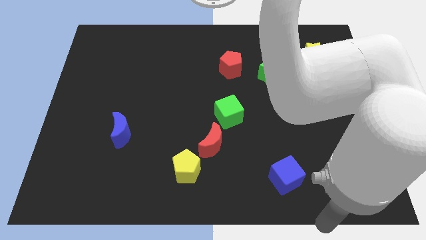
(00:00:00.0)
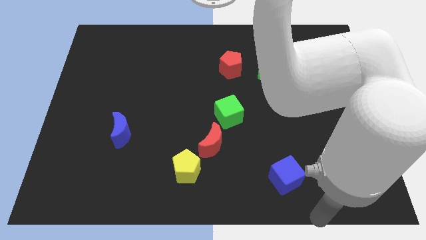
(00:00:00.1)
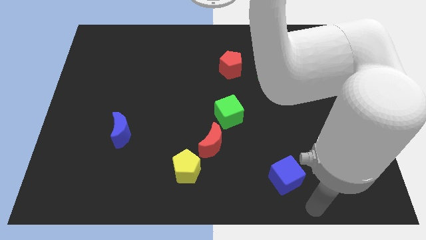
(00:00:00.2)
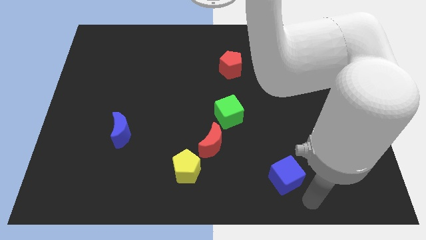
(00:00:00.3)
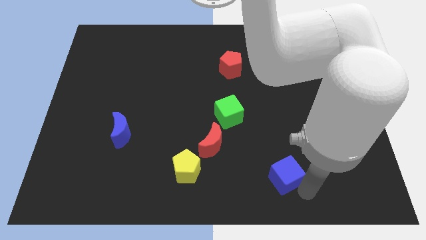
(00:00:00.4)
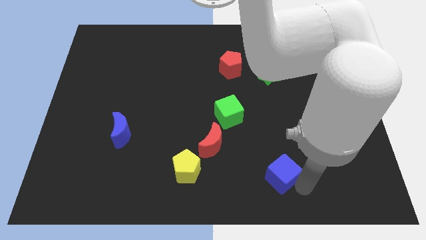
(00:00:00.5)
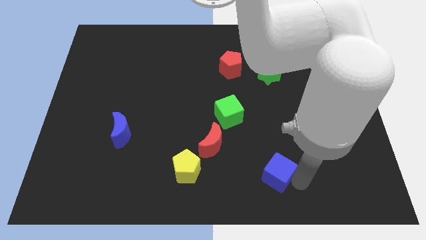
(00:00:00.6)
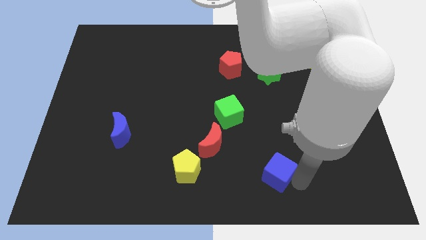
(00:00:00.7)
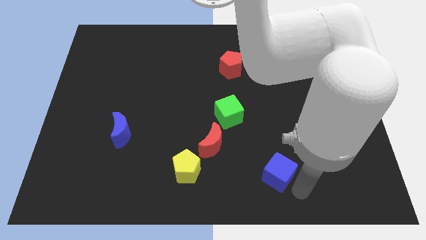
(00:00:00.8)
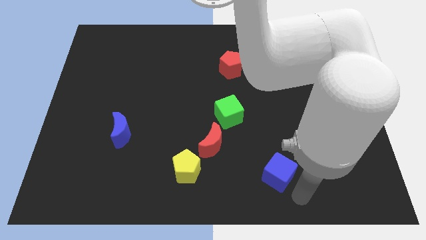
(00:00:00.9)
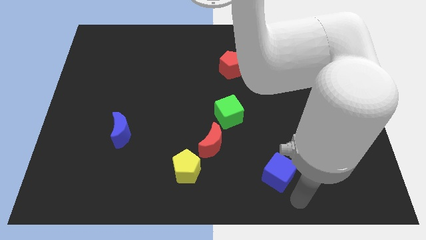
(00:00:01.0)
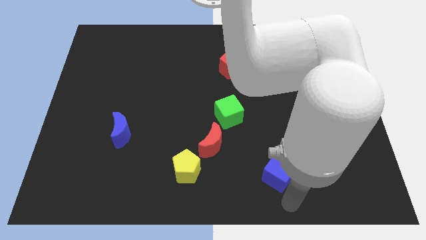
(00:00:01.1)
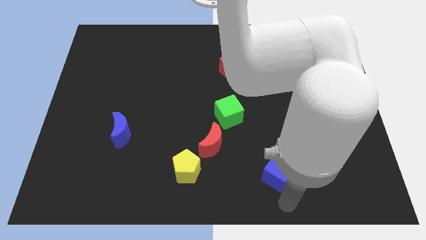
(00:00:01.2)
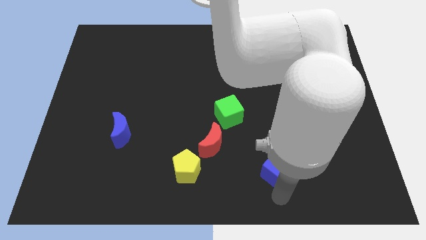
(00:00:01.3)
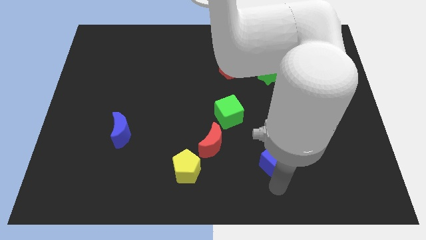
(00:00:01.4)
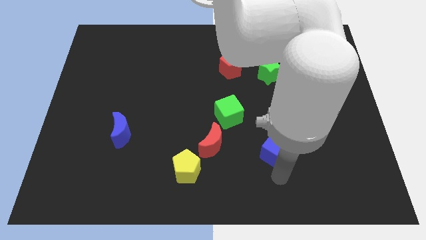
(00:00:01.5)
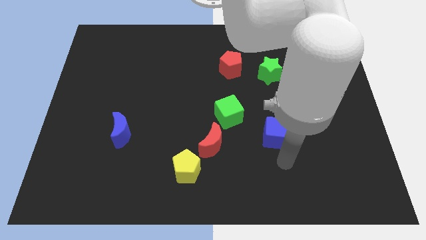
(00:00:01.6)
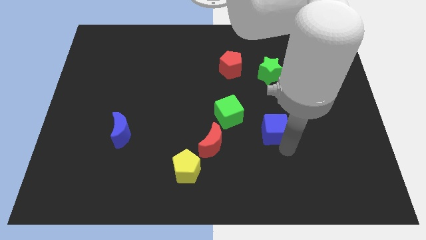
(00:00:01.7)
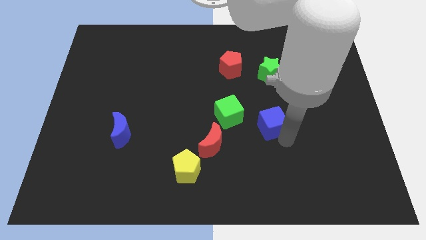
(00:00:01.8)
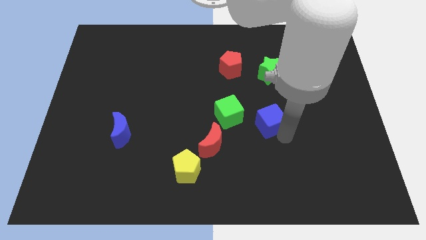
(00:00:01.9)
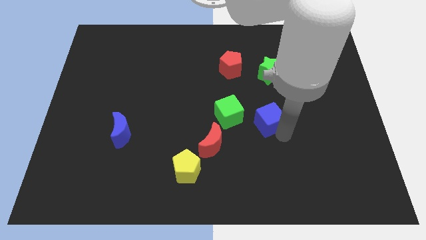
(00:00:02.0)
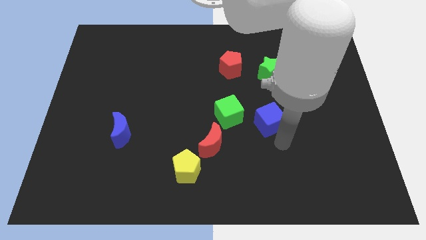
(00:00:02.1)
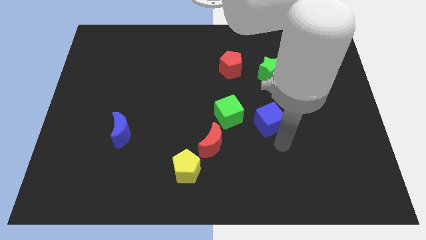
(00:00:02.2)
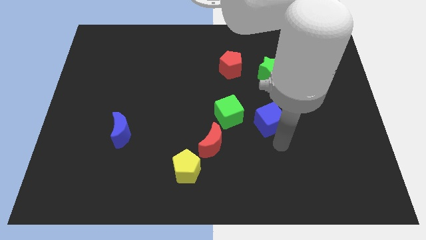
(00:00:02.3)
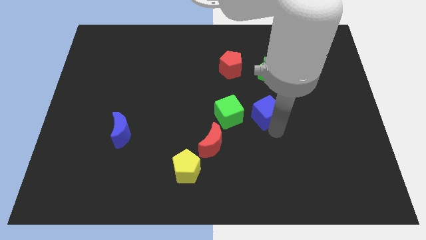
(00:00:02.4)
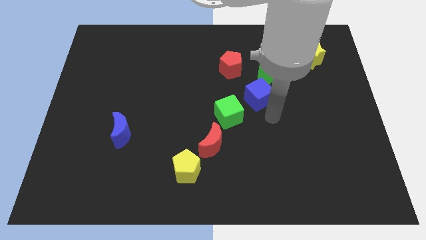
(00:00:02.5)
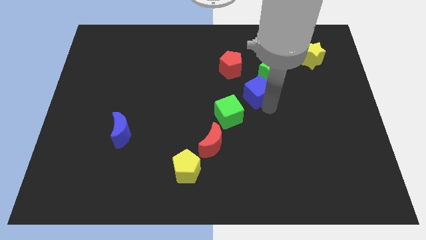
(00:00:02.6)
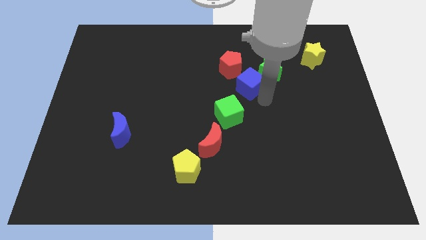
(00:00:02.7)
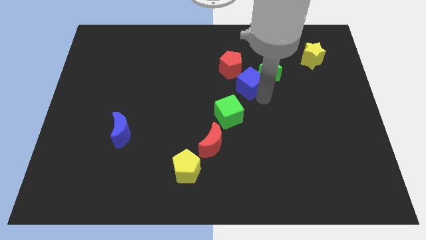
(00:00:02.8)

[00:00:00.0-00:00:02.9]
place the blue cube diagonalyl to the green cube

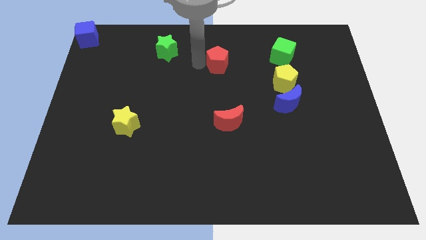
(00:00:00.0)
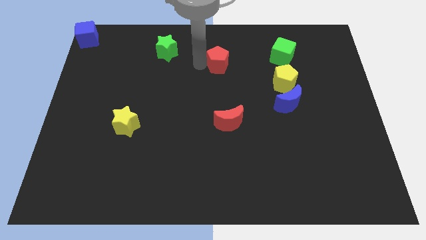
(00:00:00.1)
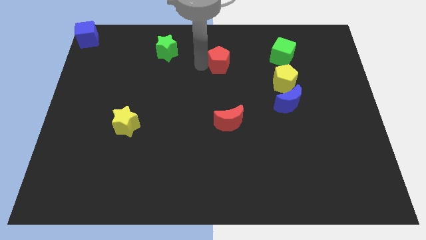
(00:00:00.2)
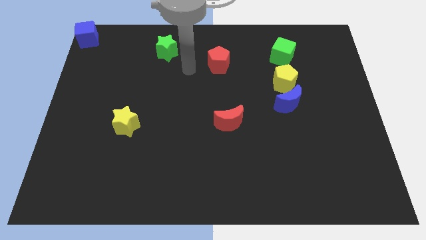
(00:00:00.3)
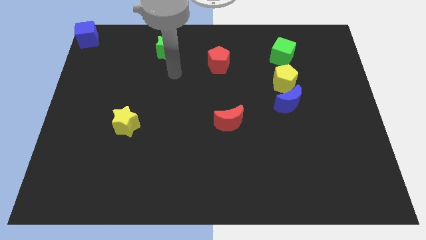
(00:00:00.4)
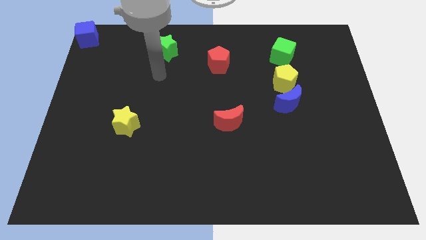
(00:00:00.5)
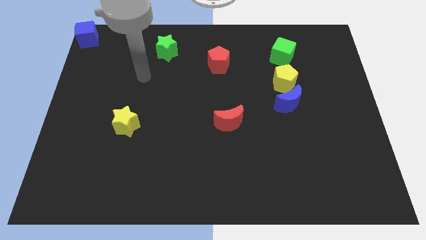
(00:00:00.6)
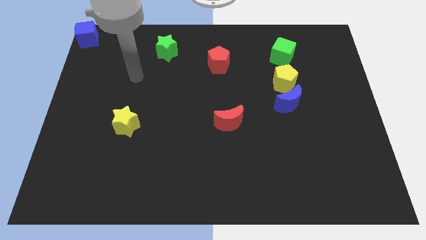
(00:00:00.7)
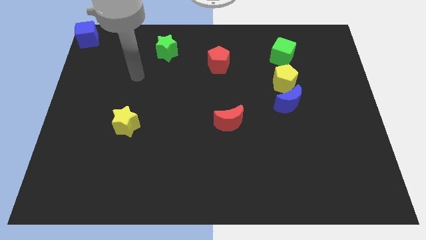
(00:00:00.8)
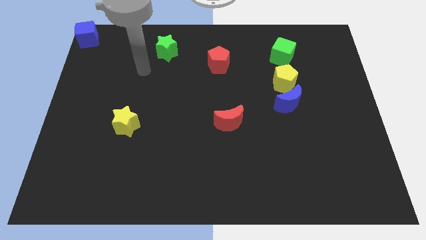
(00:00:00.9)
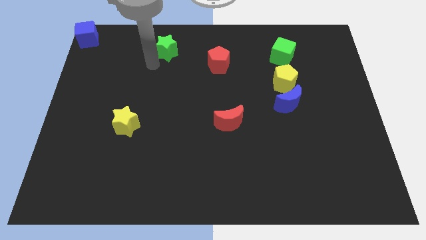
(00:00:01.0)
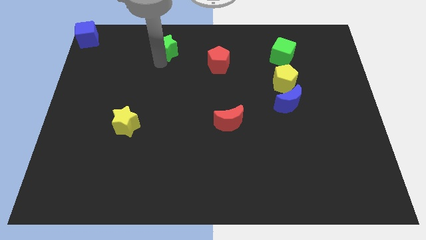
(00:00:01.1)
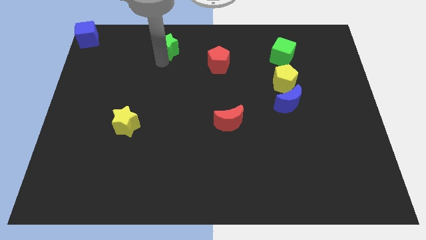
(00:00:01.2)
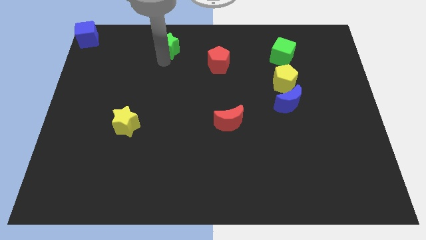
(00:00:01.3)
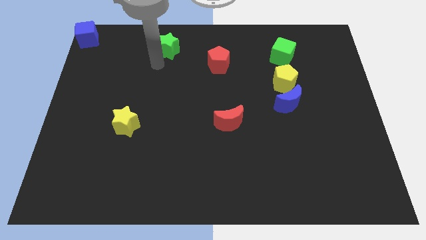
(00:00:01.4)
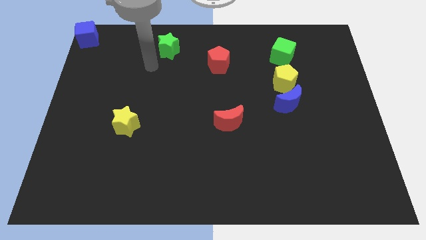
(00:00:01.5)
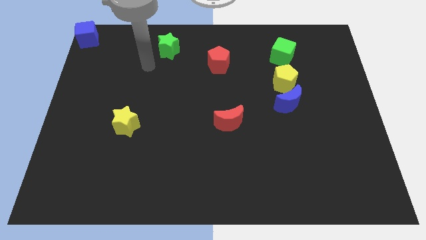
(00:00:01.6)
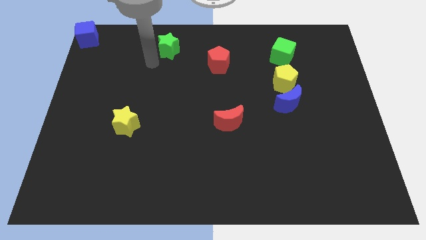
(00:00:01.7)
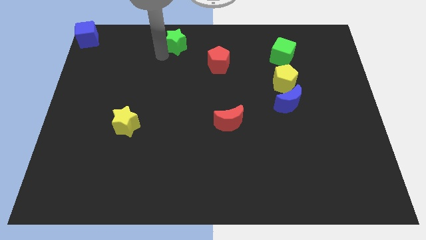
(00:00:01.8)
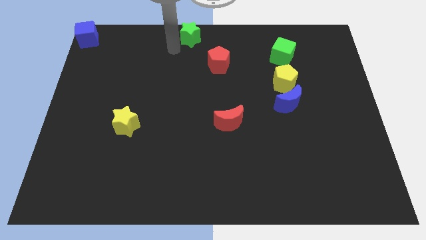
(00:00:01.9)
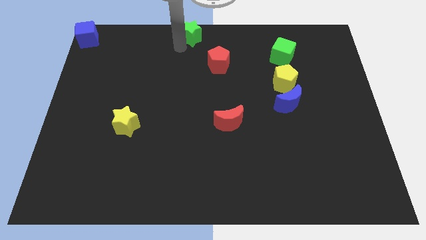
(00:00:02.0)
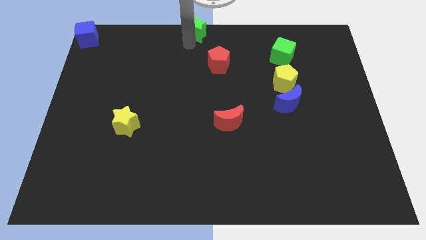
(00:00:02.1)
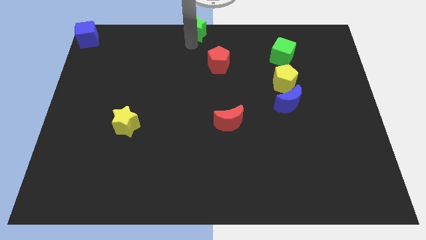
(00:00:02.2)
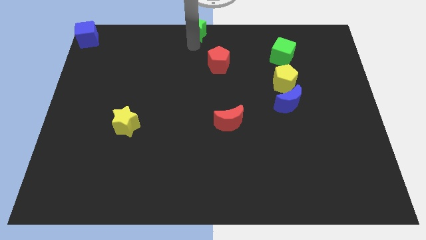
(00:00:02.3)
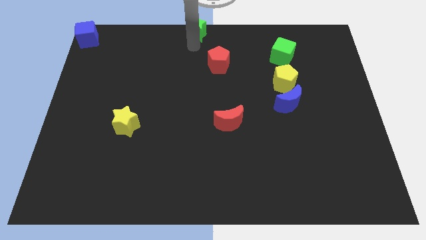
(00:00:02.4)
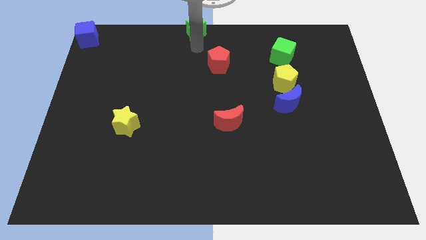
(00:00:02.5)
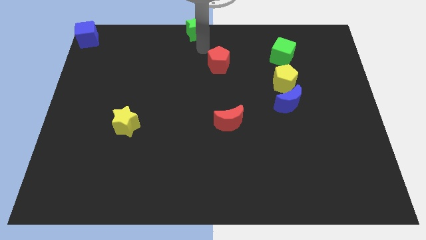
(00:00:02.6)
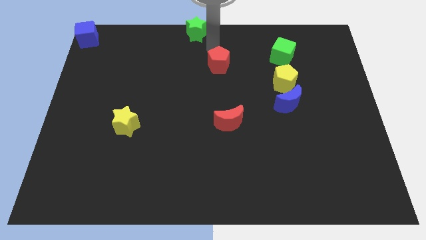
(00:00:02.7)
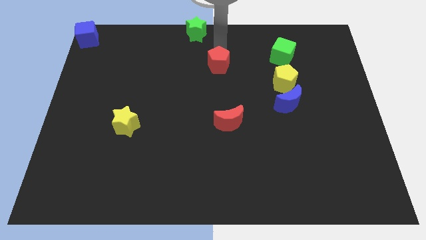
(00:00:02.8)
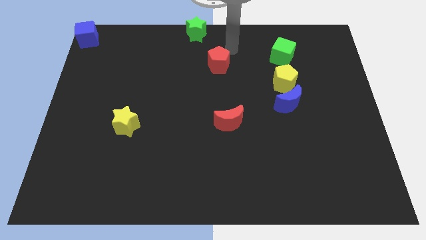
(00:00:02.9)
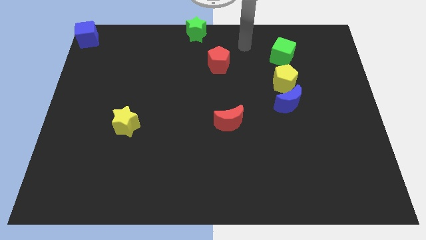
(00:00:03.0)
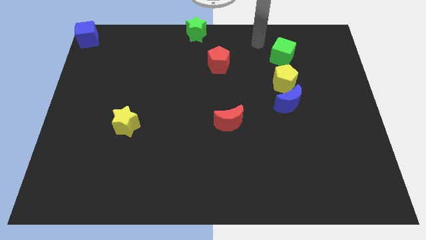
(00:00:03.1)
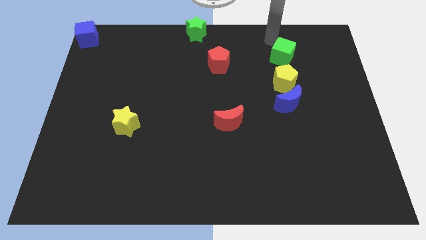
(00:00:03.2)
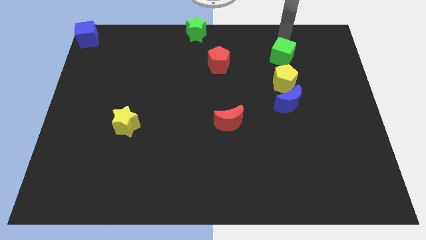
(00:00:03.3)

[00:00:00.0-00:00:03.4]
move the green star to the top middle of the board

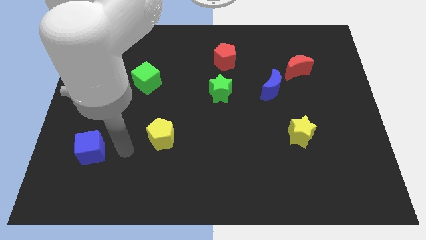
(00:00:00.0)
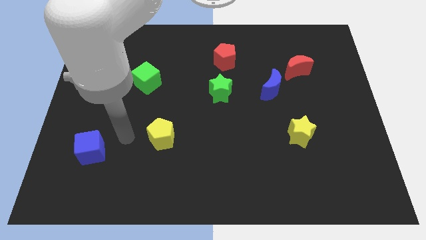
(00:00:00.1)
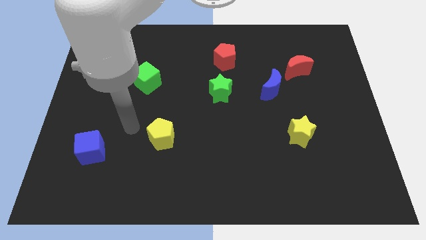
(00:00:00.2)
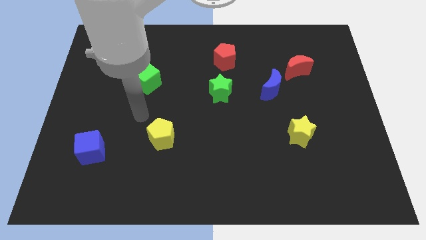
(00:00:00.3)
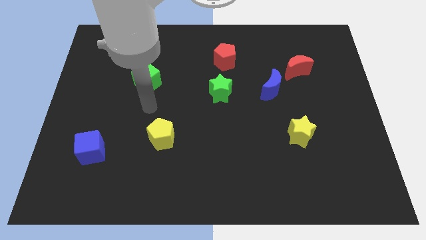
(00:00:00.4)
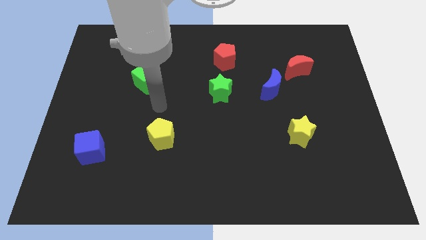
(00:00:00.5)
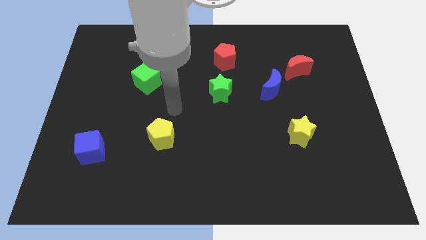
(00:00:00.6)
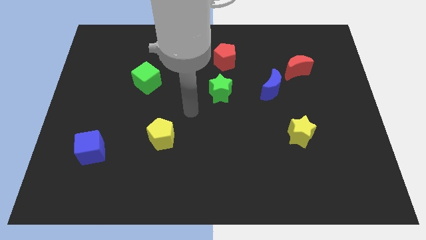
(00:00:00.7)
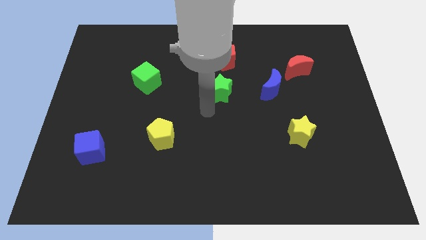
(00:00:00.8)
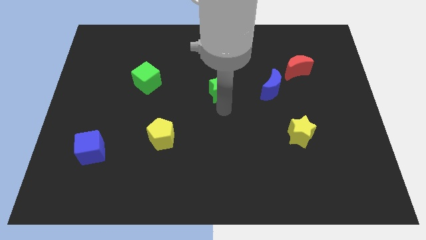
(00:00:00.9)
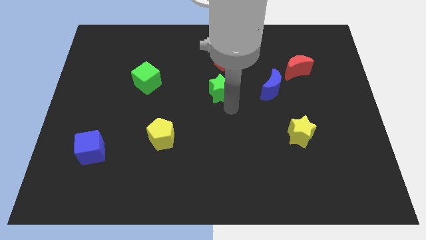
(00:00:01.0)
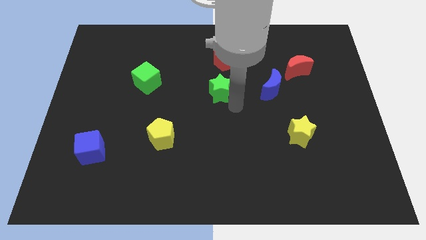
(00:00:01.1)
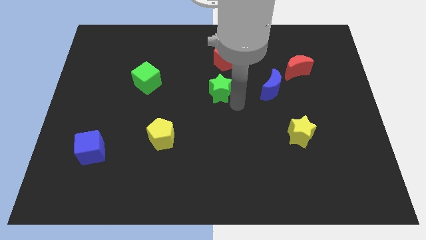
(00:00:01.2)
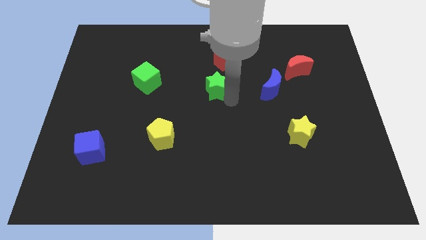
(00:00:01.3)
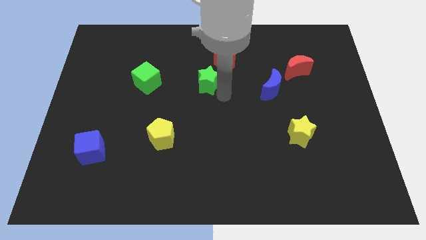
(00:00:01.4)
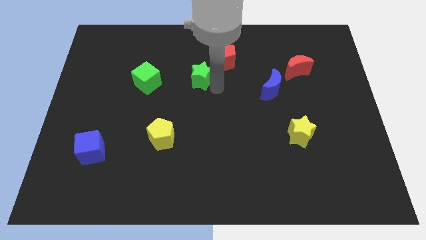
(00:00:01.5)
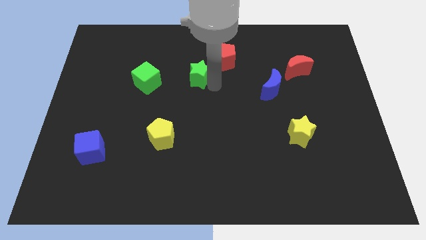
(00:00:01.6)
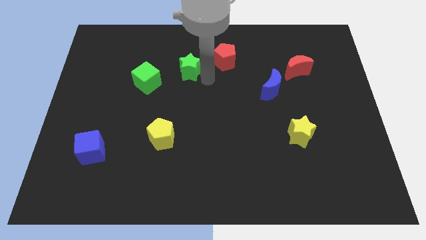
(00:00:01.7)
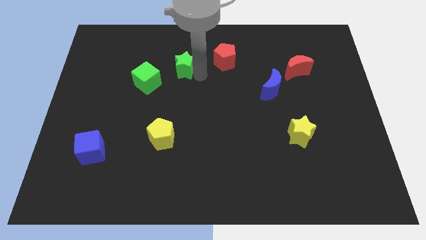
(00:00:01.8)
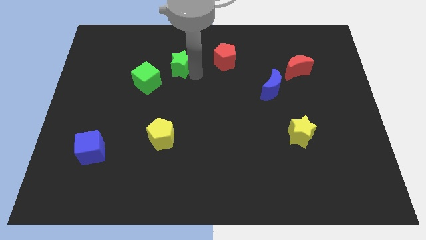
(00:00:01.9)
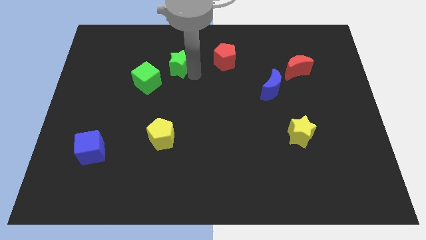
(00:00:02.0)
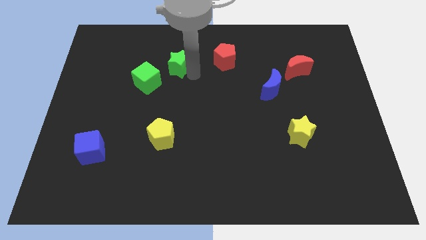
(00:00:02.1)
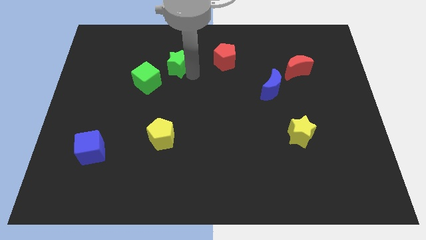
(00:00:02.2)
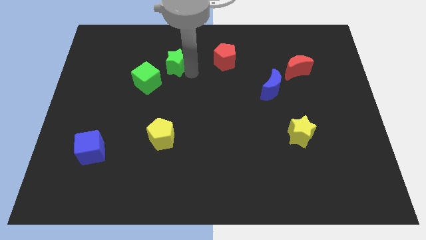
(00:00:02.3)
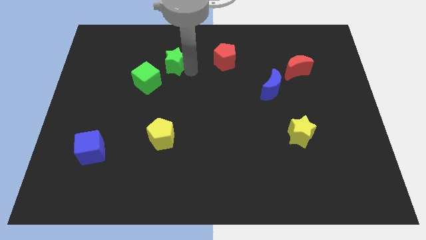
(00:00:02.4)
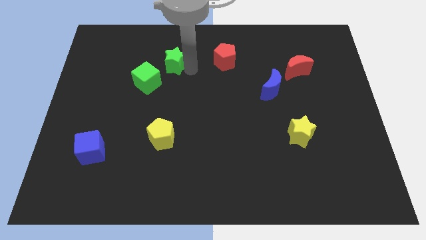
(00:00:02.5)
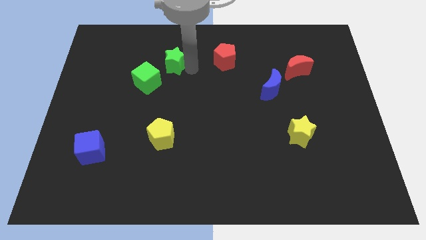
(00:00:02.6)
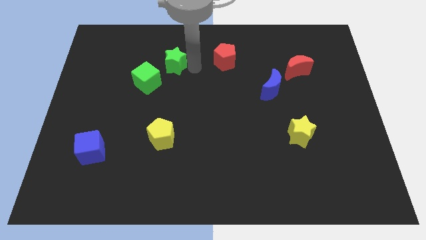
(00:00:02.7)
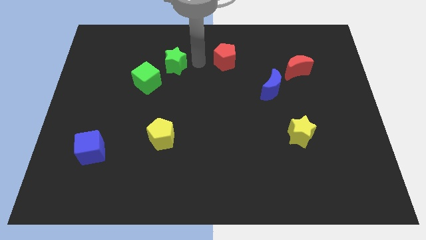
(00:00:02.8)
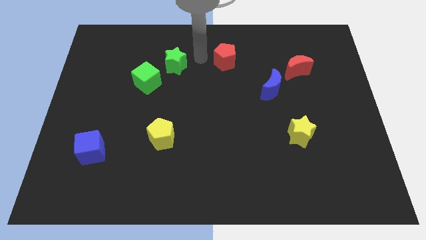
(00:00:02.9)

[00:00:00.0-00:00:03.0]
push green star diagonally right above green cube
